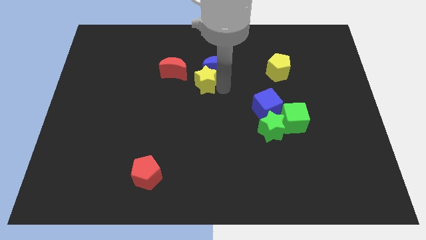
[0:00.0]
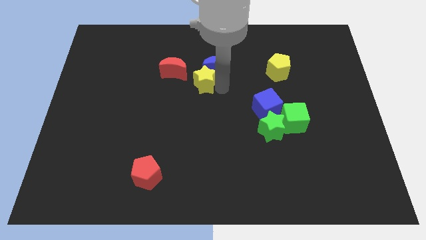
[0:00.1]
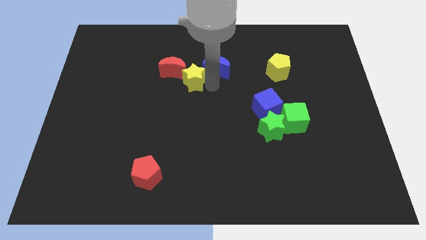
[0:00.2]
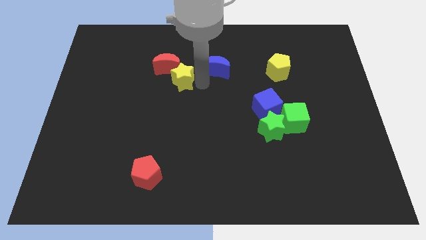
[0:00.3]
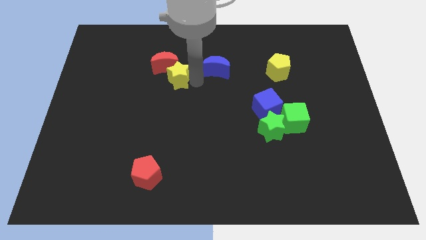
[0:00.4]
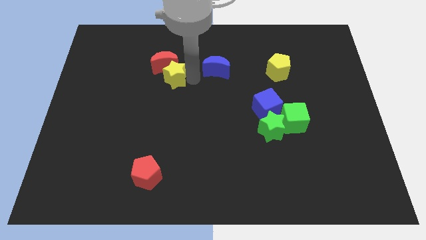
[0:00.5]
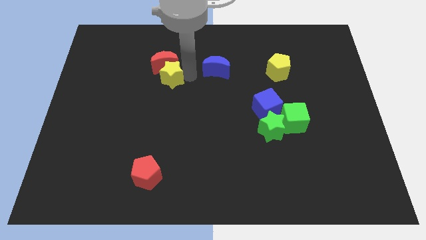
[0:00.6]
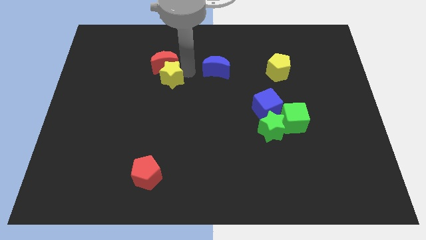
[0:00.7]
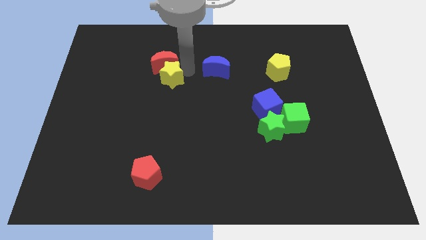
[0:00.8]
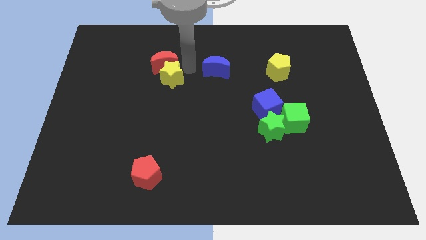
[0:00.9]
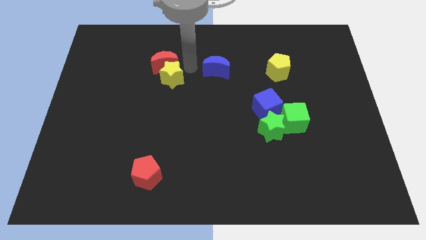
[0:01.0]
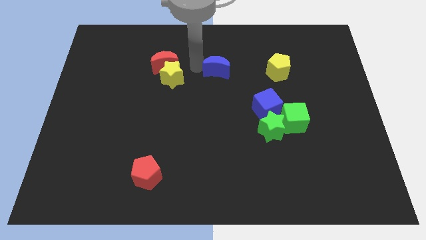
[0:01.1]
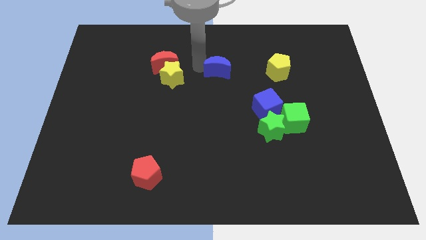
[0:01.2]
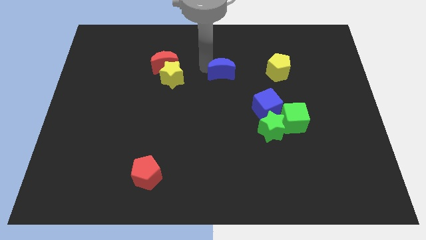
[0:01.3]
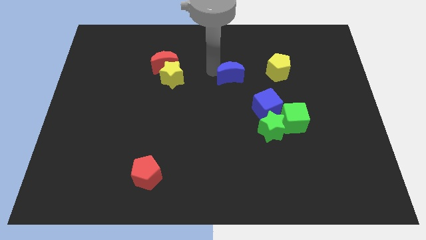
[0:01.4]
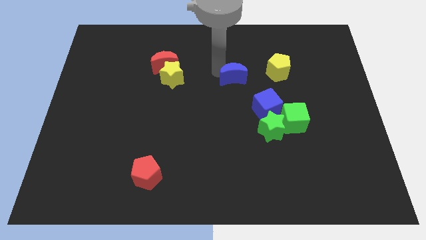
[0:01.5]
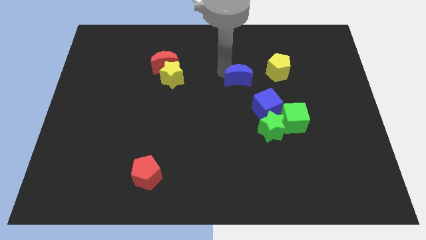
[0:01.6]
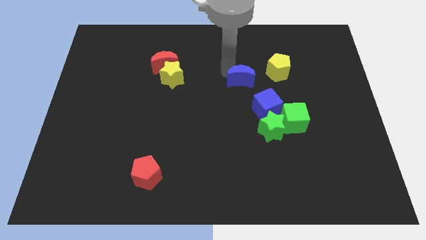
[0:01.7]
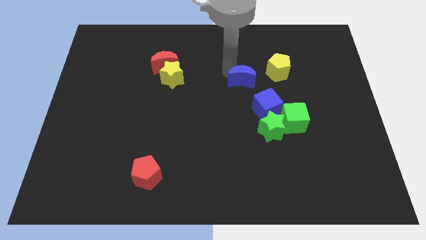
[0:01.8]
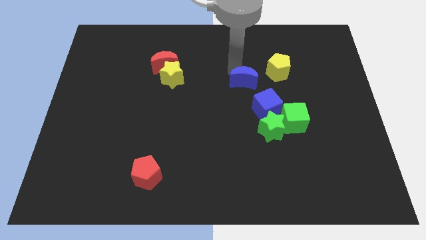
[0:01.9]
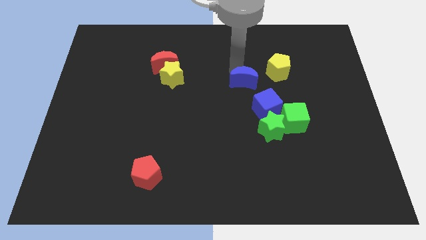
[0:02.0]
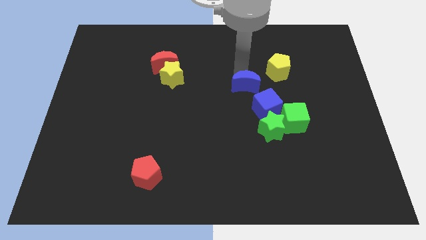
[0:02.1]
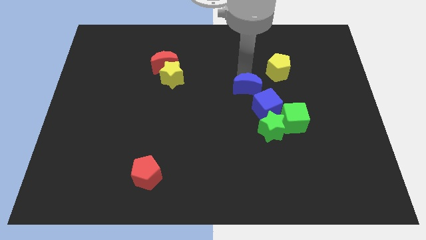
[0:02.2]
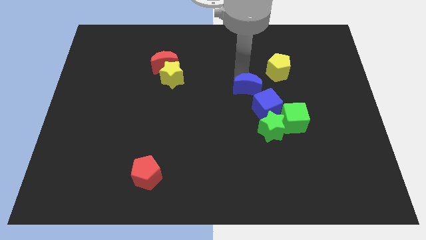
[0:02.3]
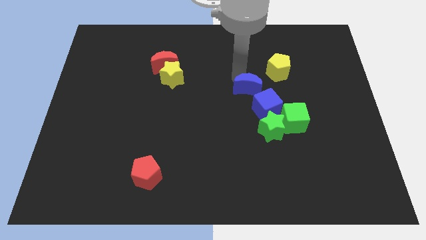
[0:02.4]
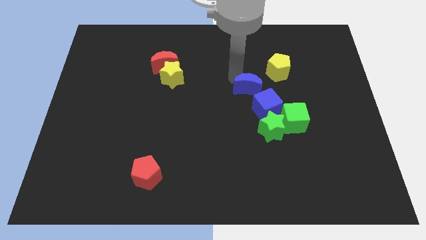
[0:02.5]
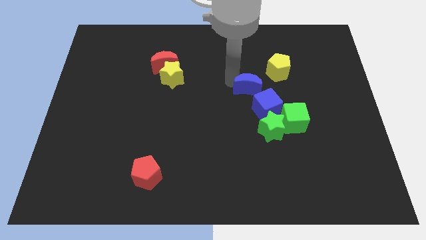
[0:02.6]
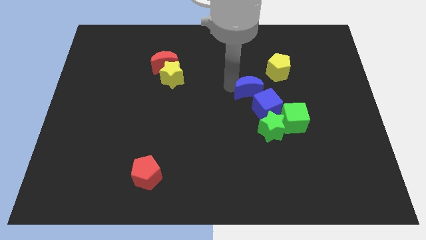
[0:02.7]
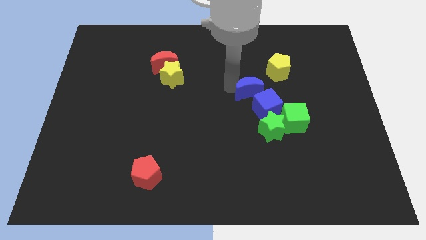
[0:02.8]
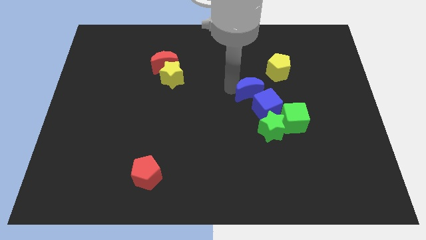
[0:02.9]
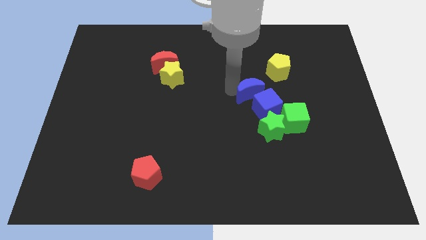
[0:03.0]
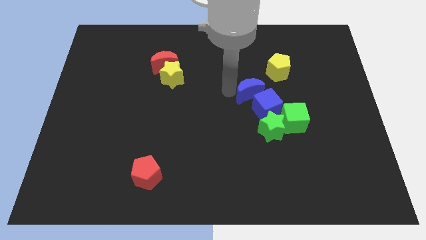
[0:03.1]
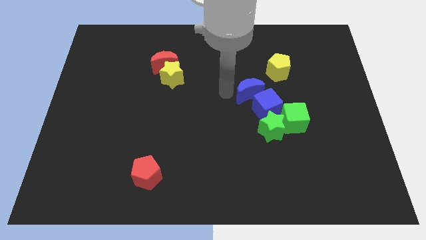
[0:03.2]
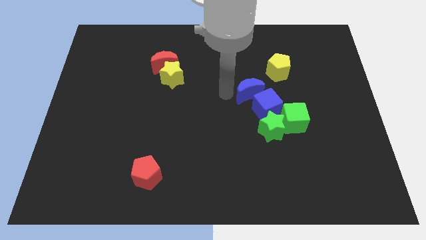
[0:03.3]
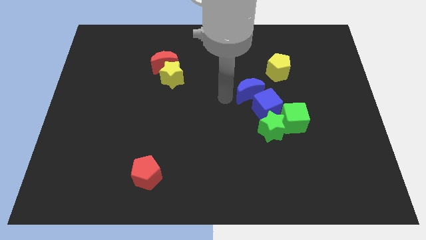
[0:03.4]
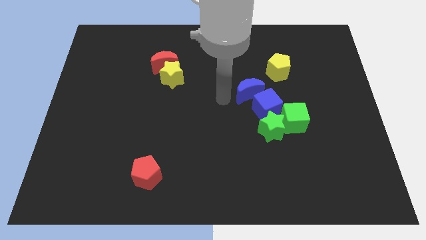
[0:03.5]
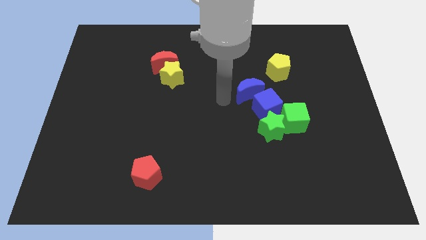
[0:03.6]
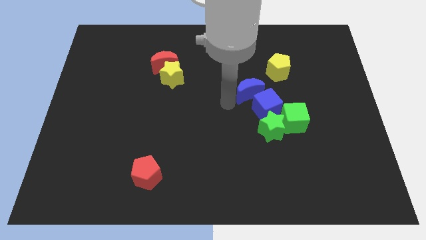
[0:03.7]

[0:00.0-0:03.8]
drag the blue moon close to the blue cube

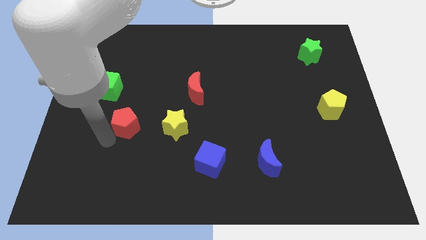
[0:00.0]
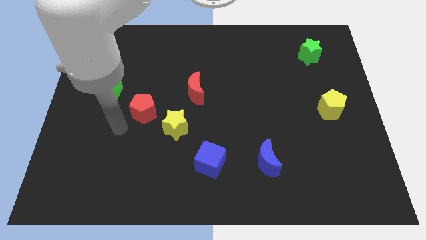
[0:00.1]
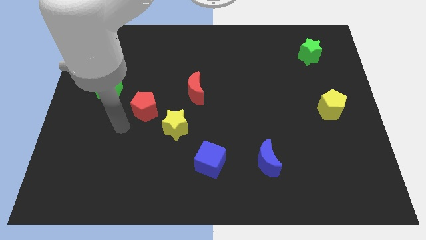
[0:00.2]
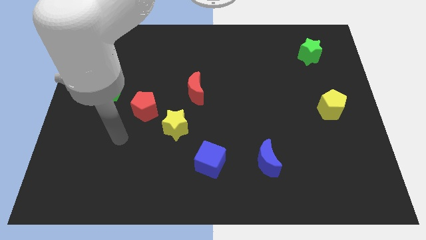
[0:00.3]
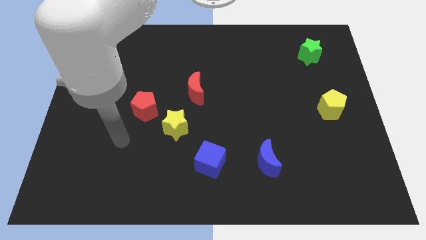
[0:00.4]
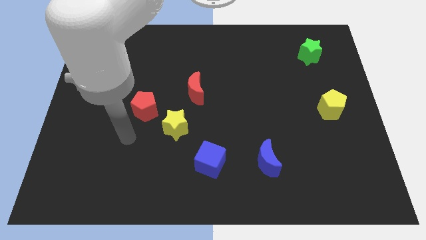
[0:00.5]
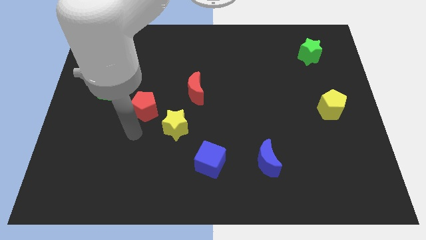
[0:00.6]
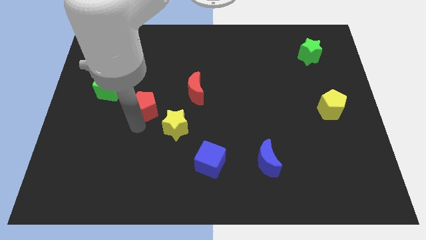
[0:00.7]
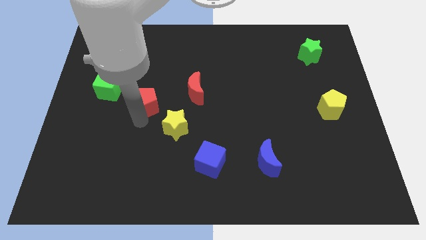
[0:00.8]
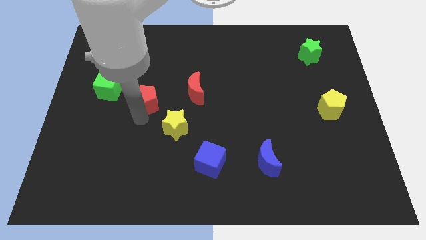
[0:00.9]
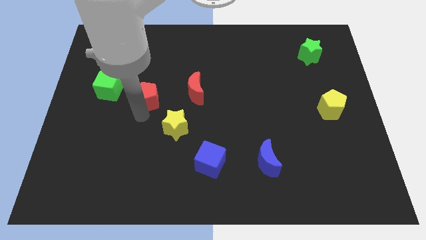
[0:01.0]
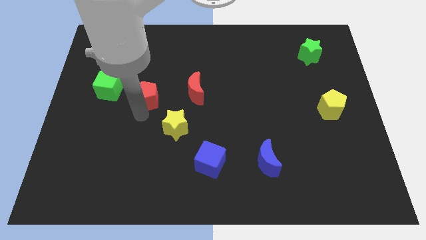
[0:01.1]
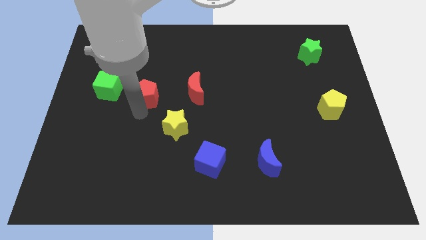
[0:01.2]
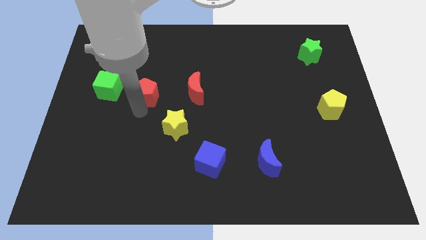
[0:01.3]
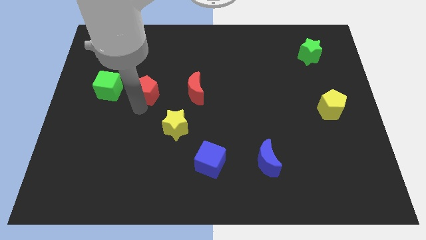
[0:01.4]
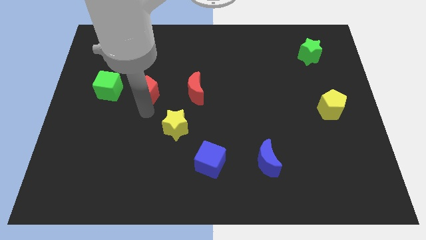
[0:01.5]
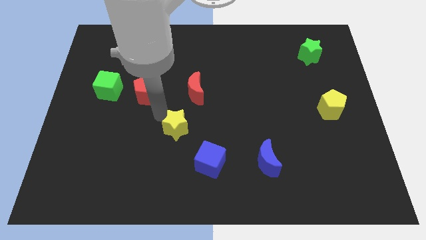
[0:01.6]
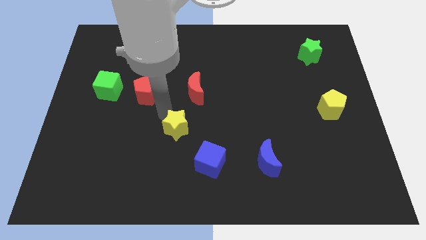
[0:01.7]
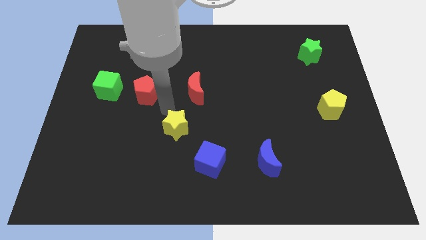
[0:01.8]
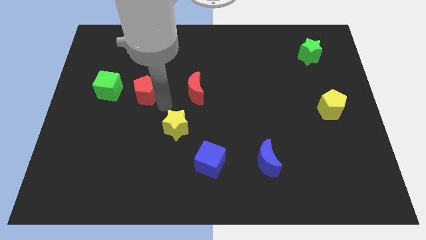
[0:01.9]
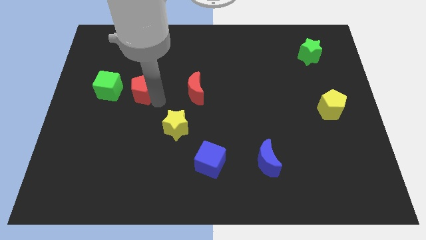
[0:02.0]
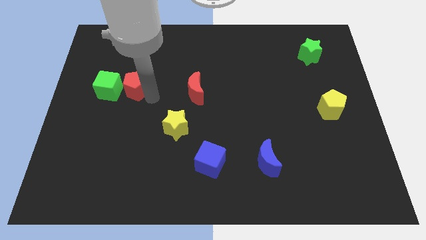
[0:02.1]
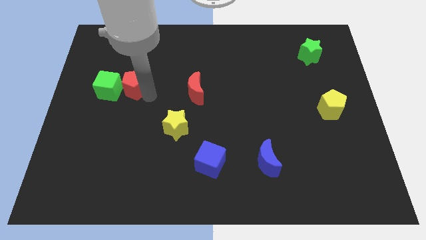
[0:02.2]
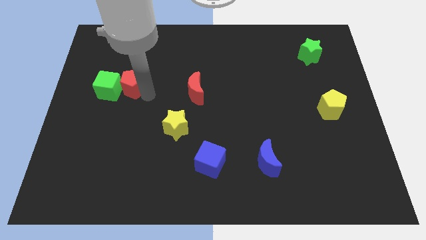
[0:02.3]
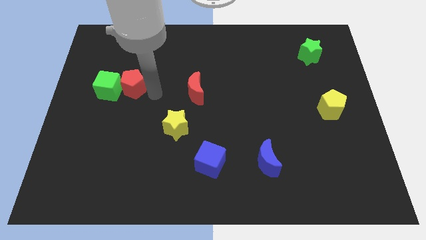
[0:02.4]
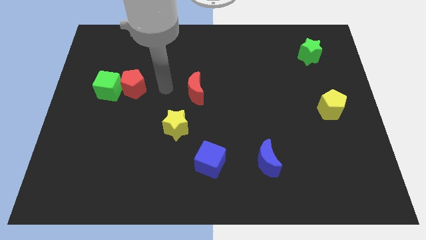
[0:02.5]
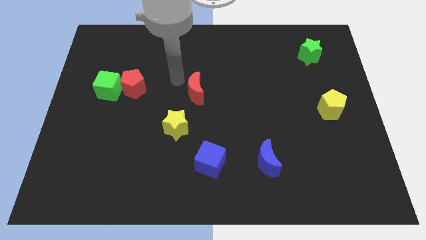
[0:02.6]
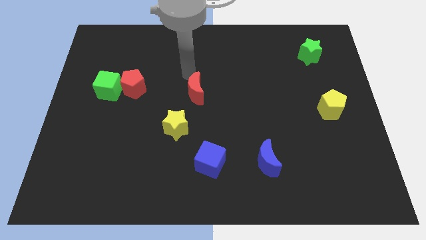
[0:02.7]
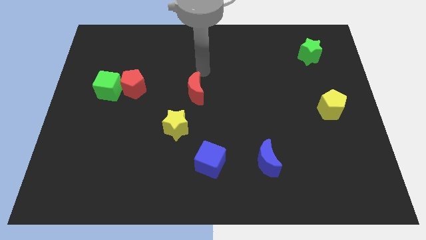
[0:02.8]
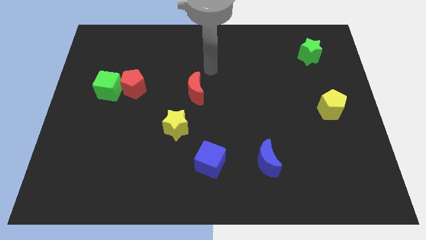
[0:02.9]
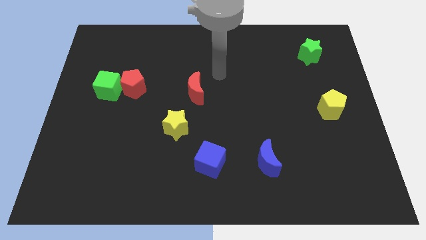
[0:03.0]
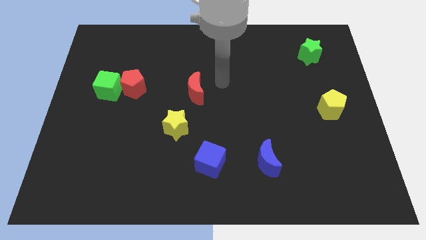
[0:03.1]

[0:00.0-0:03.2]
put the red pentagon on the right side of the green cube

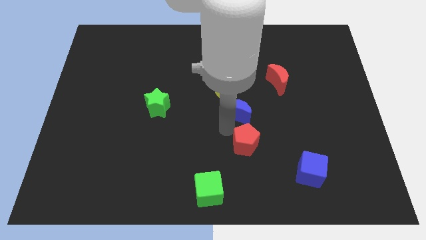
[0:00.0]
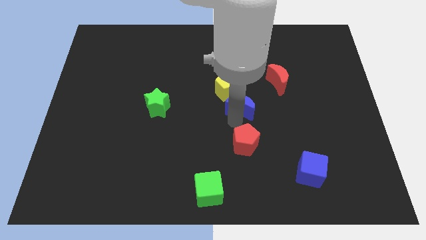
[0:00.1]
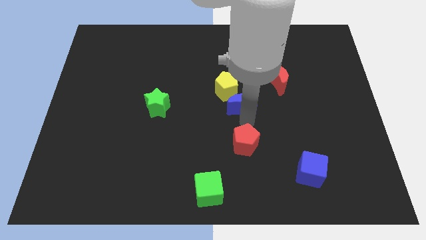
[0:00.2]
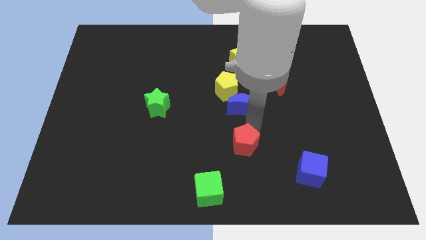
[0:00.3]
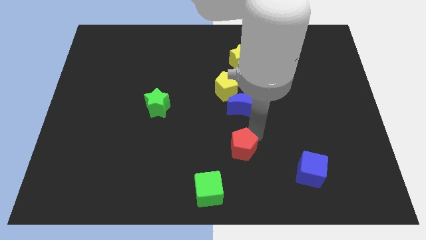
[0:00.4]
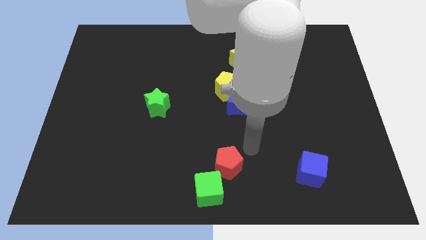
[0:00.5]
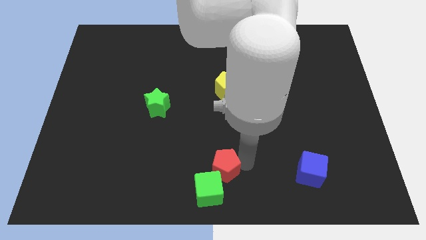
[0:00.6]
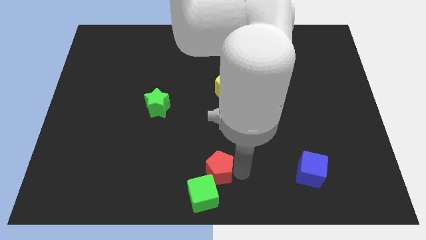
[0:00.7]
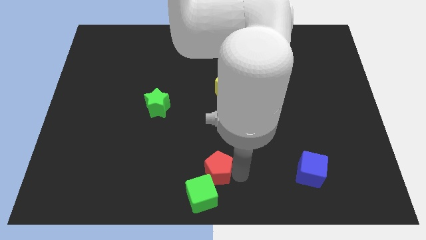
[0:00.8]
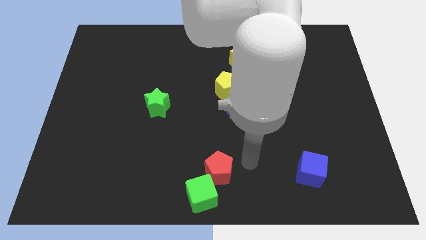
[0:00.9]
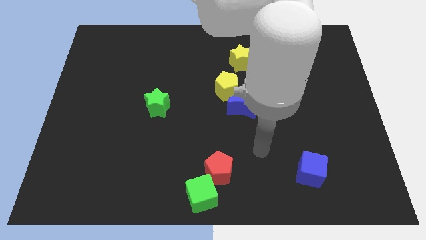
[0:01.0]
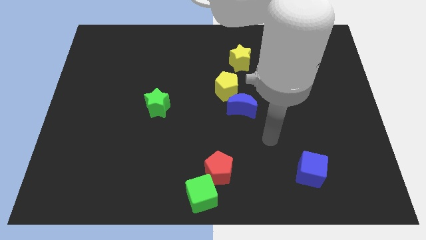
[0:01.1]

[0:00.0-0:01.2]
push the red pentagon into the green cube

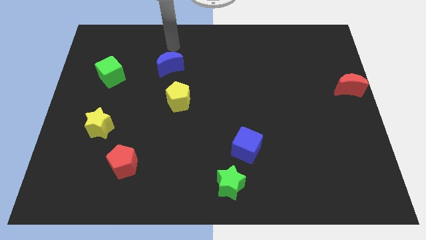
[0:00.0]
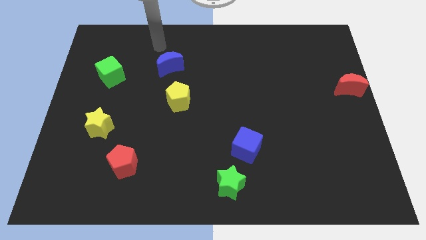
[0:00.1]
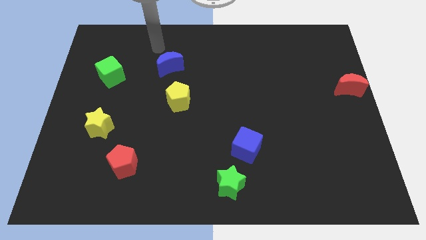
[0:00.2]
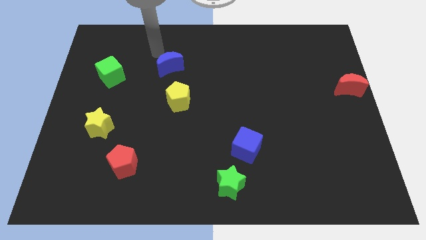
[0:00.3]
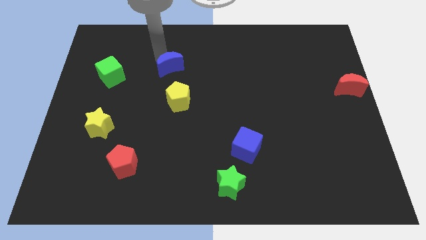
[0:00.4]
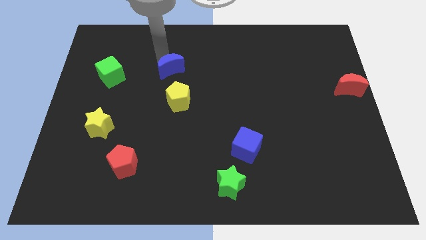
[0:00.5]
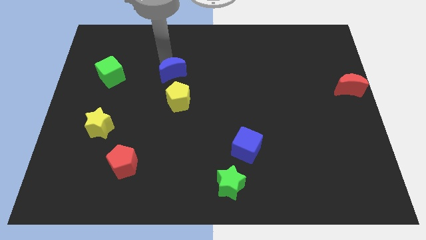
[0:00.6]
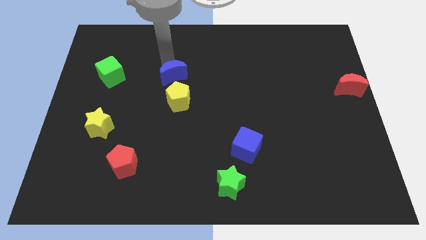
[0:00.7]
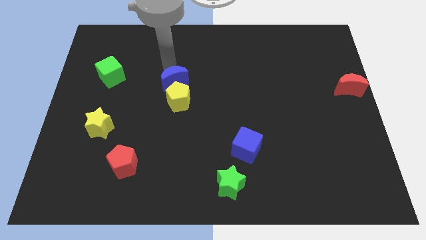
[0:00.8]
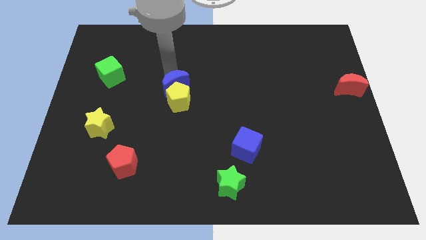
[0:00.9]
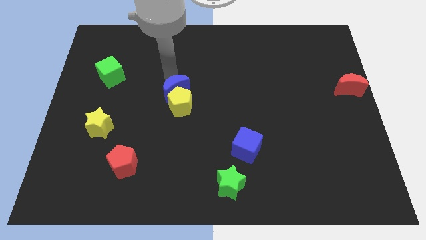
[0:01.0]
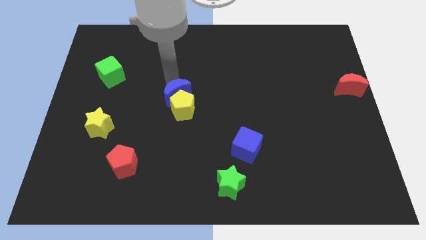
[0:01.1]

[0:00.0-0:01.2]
place the blue moon into the yellow pentagon
